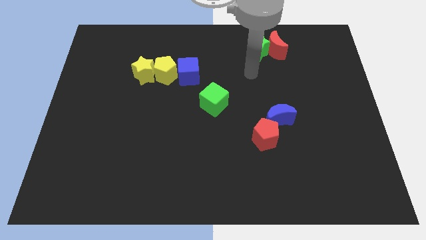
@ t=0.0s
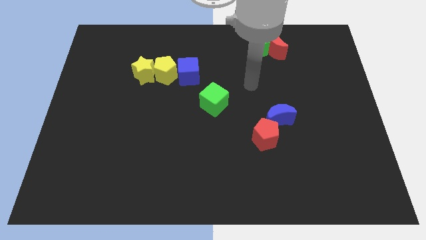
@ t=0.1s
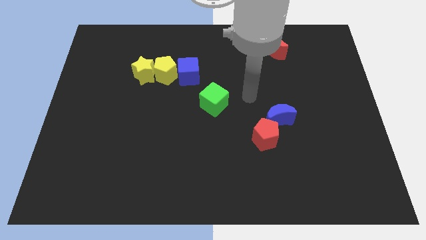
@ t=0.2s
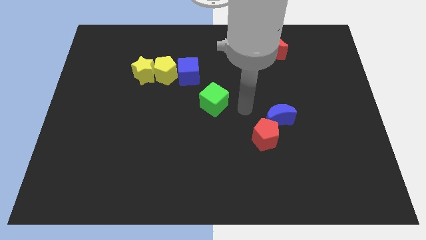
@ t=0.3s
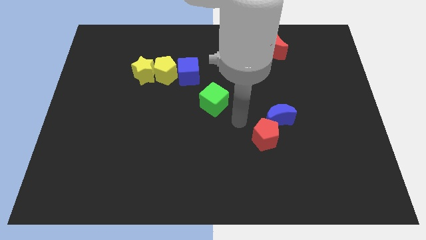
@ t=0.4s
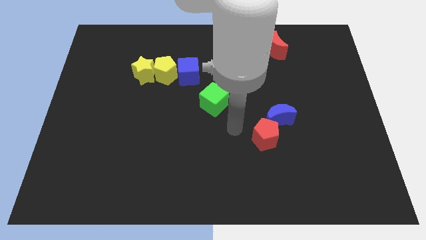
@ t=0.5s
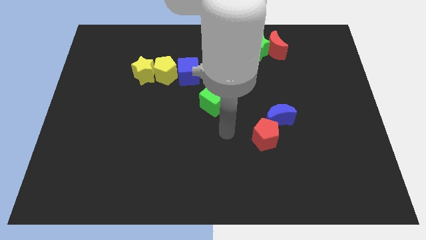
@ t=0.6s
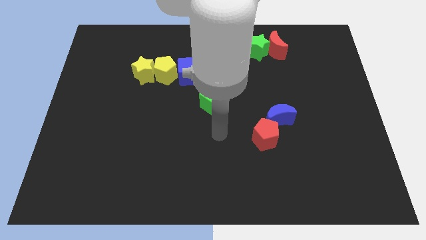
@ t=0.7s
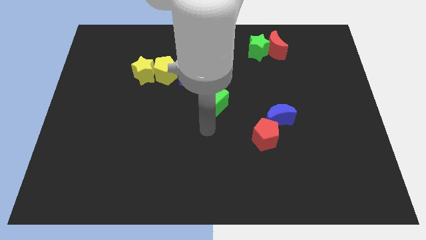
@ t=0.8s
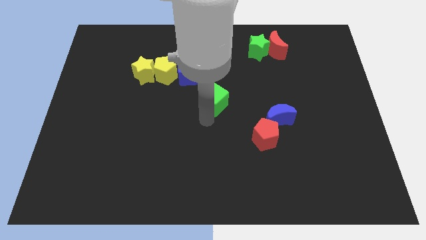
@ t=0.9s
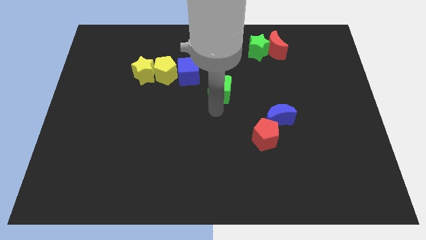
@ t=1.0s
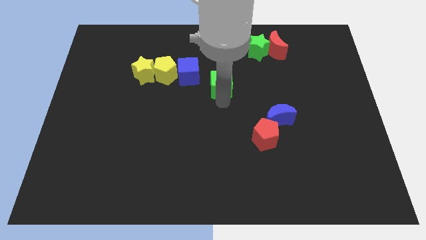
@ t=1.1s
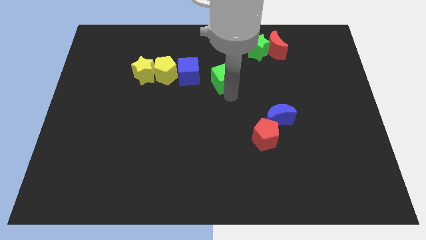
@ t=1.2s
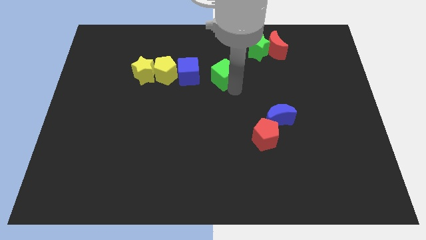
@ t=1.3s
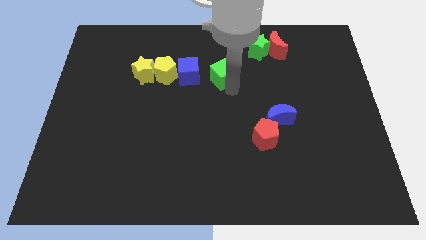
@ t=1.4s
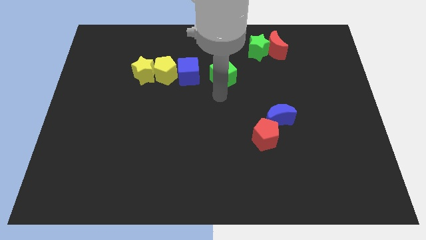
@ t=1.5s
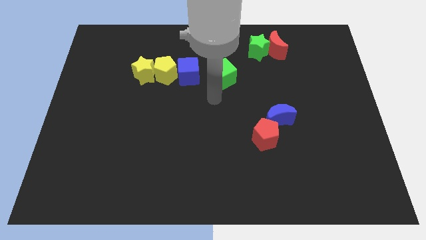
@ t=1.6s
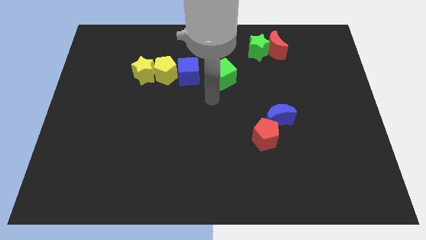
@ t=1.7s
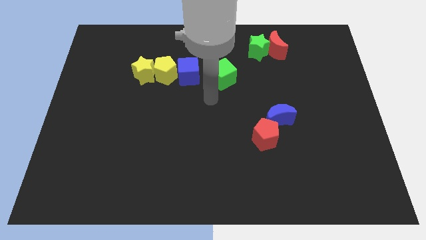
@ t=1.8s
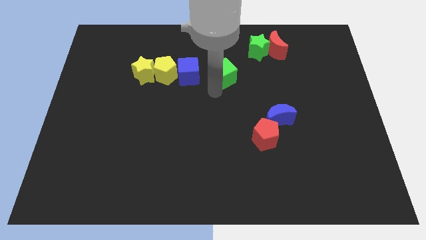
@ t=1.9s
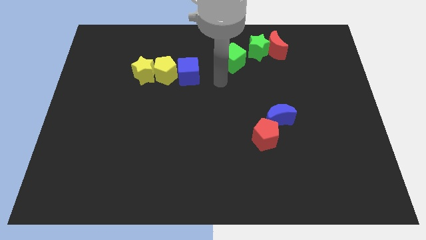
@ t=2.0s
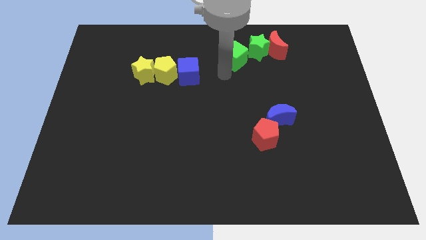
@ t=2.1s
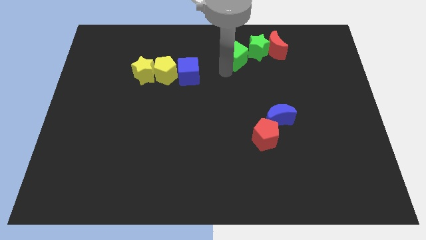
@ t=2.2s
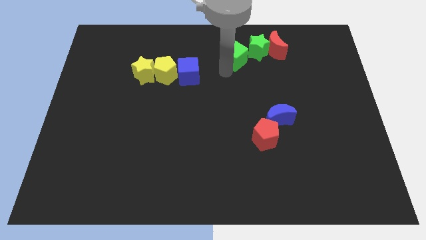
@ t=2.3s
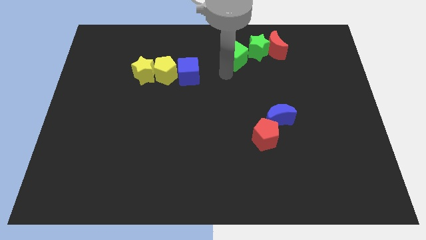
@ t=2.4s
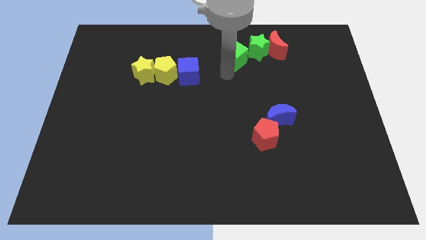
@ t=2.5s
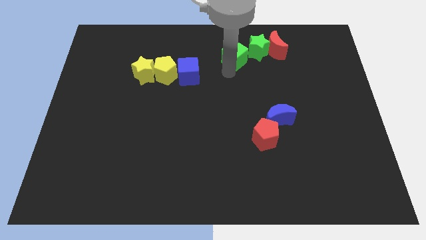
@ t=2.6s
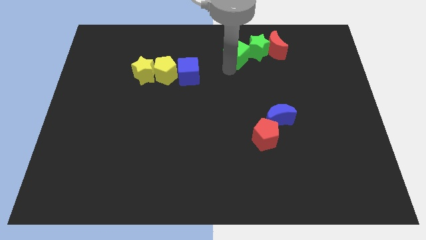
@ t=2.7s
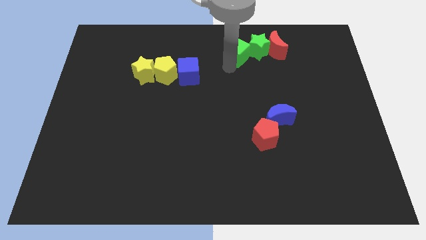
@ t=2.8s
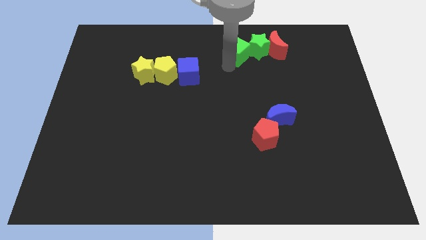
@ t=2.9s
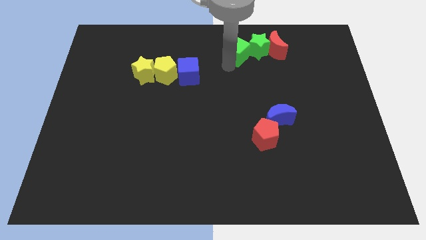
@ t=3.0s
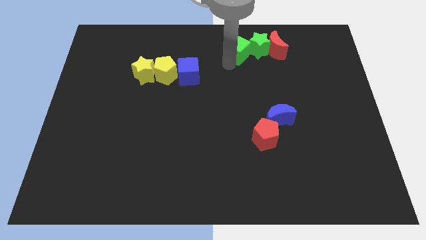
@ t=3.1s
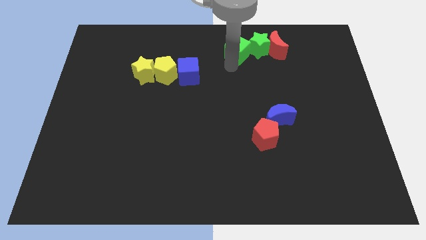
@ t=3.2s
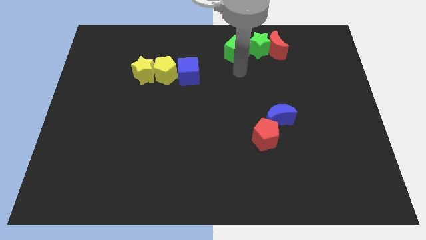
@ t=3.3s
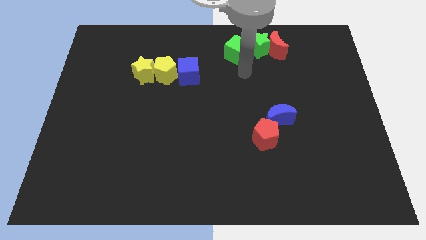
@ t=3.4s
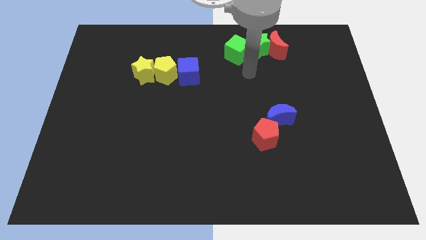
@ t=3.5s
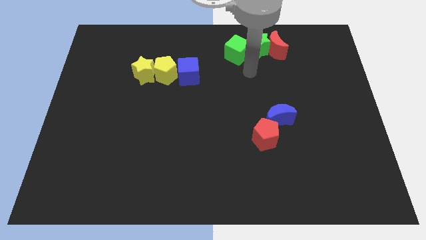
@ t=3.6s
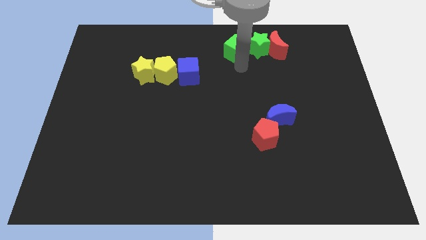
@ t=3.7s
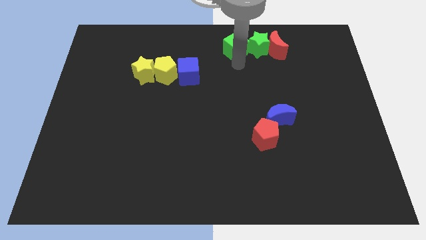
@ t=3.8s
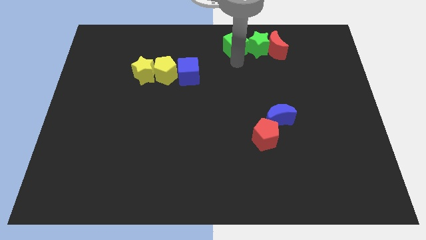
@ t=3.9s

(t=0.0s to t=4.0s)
push the green cube towards the top center

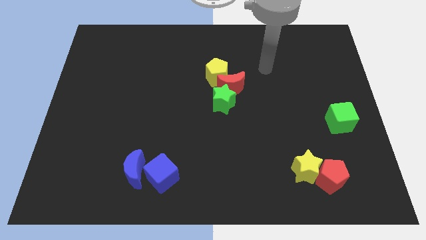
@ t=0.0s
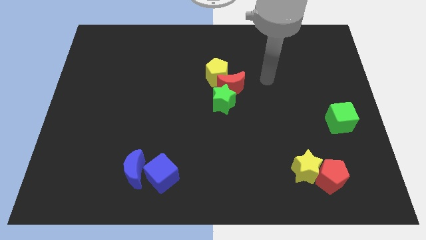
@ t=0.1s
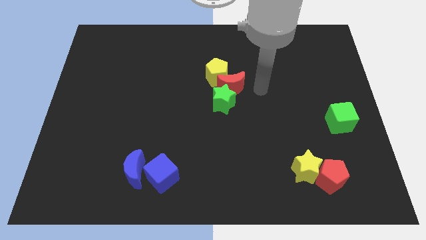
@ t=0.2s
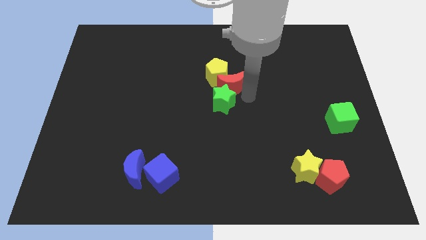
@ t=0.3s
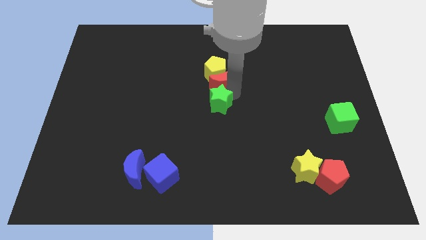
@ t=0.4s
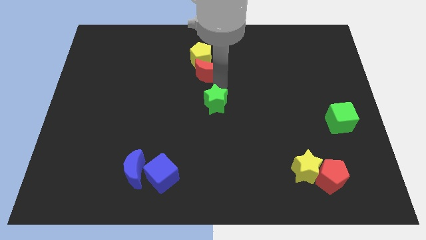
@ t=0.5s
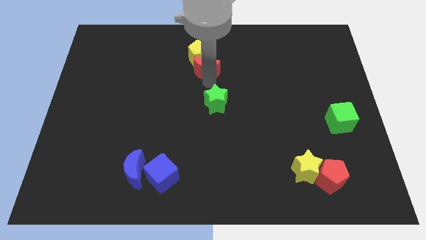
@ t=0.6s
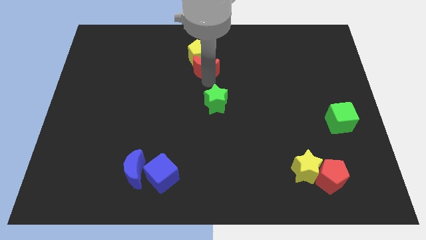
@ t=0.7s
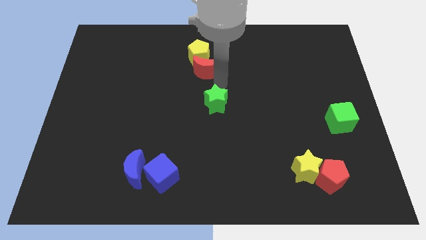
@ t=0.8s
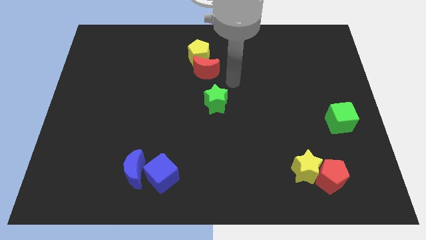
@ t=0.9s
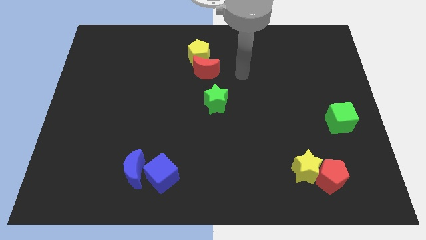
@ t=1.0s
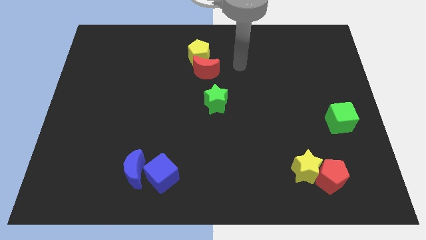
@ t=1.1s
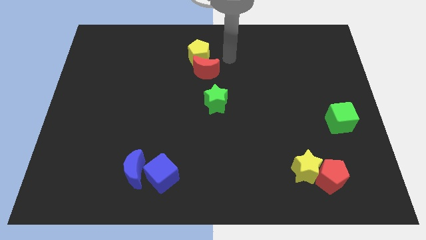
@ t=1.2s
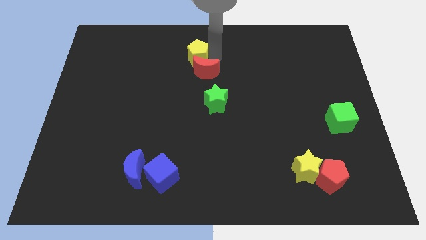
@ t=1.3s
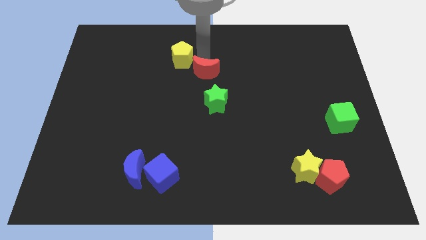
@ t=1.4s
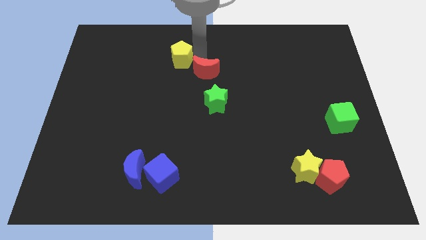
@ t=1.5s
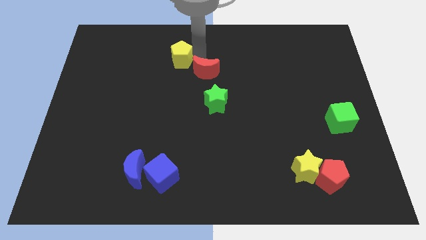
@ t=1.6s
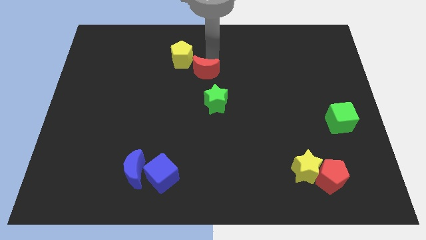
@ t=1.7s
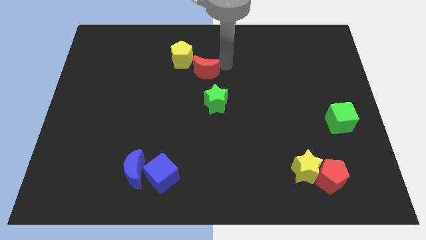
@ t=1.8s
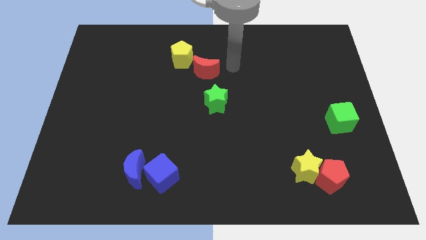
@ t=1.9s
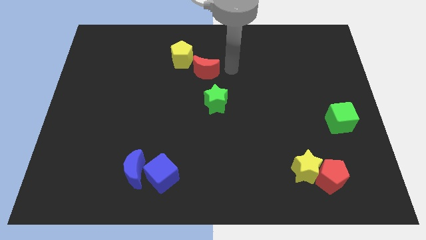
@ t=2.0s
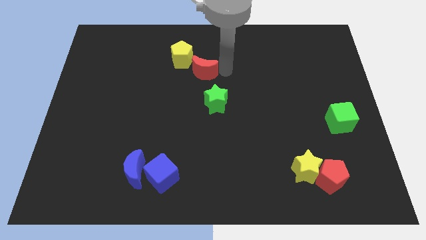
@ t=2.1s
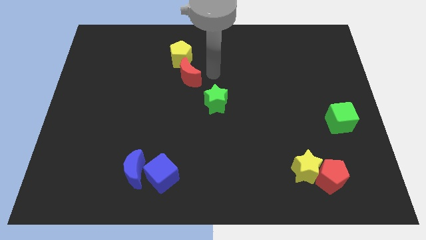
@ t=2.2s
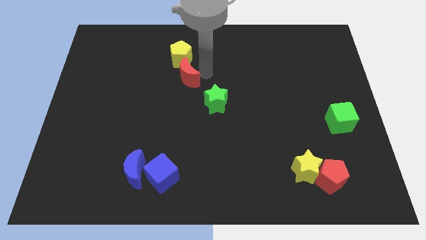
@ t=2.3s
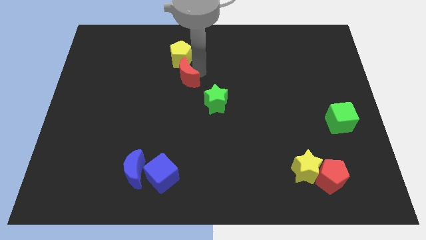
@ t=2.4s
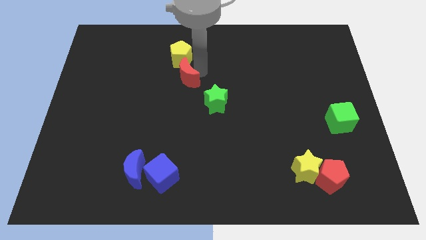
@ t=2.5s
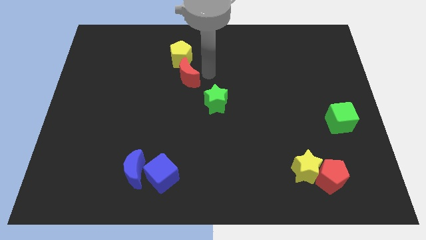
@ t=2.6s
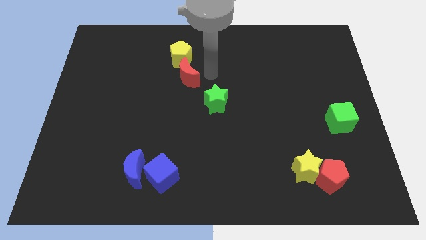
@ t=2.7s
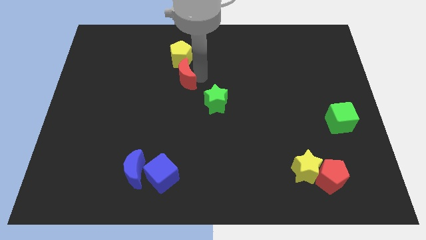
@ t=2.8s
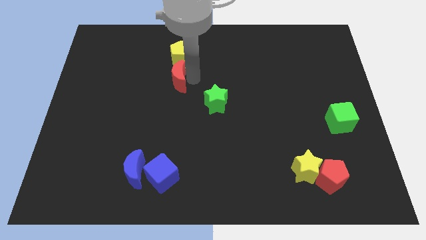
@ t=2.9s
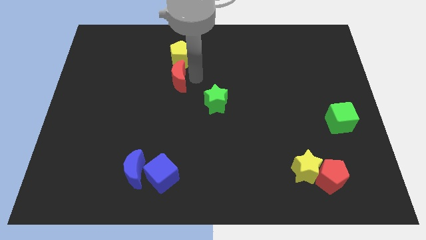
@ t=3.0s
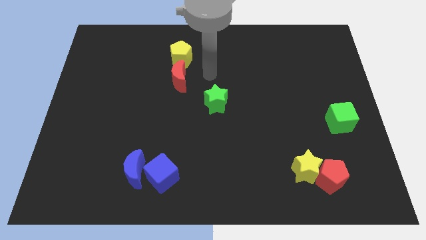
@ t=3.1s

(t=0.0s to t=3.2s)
separate the red moon and the yellow pentagon from the green star

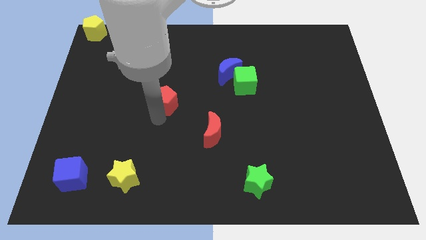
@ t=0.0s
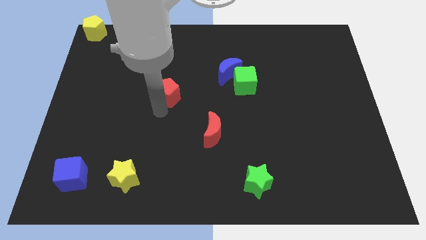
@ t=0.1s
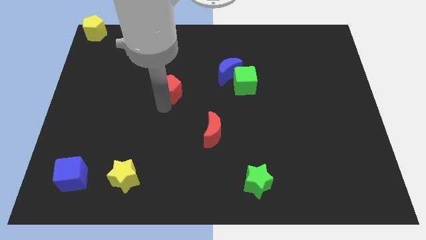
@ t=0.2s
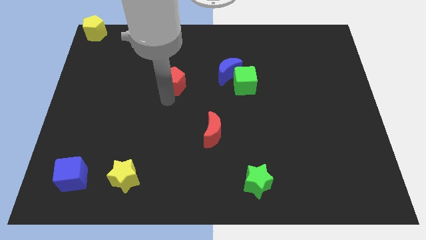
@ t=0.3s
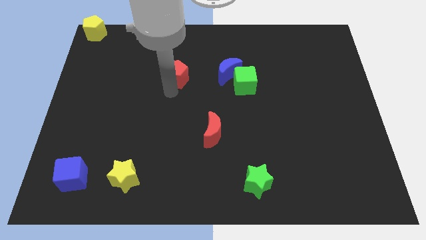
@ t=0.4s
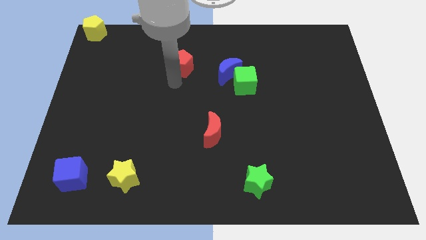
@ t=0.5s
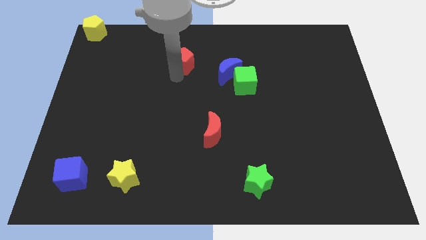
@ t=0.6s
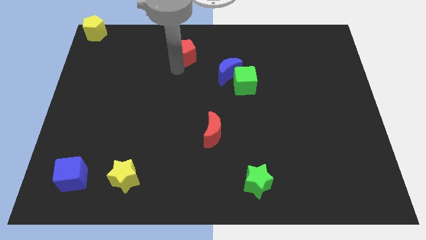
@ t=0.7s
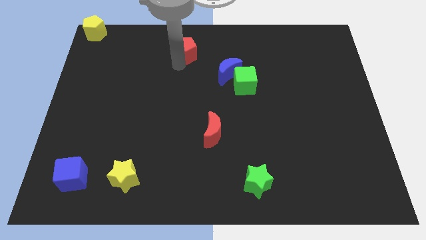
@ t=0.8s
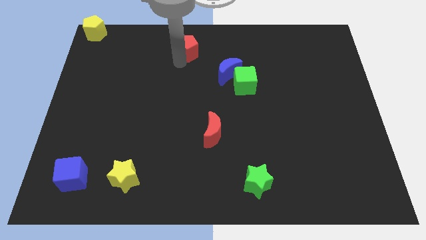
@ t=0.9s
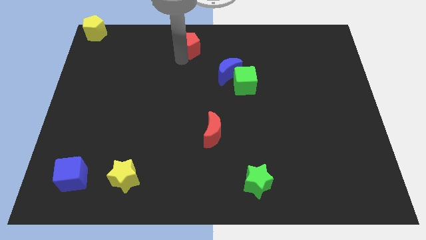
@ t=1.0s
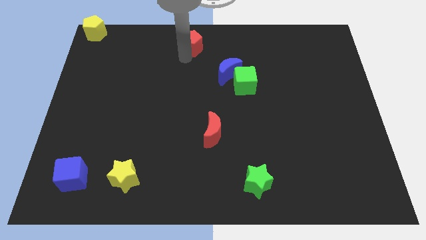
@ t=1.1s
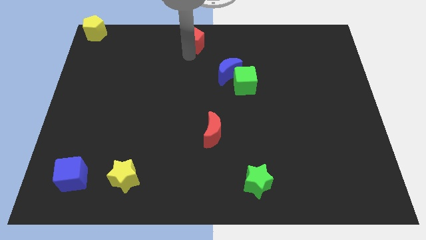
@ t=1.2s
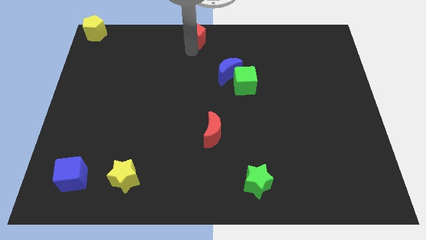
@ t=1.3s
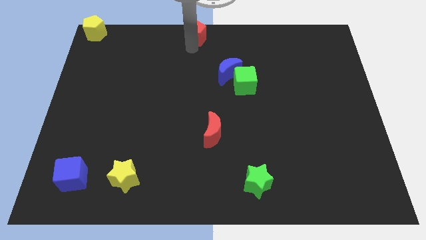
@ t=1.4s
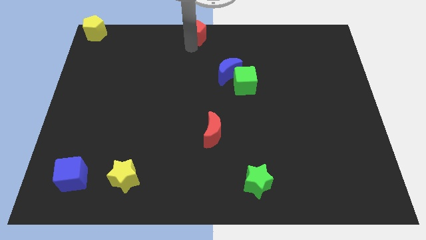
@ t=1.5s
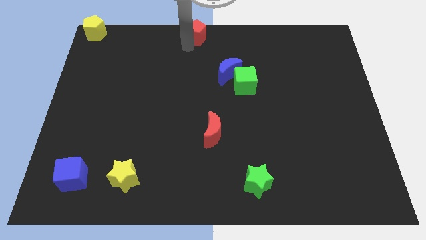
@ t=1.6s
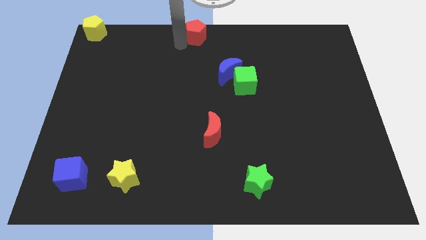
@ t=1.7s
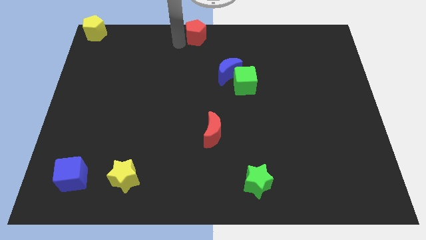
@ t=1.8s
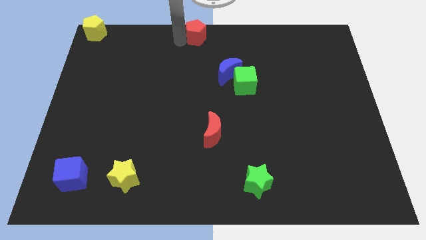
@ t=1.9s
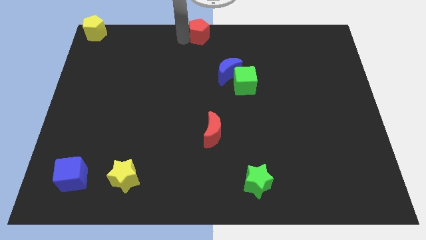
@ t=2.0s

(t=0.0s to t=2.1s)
place red pentagon to the top center
